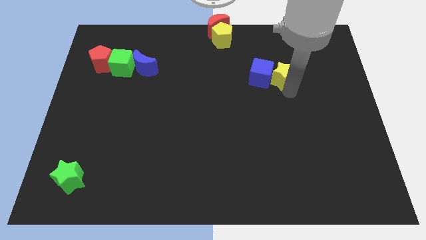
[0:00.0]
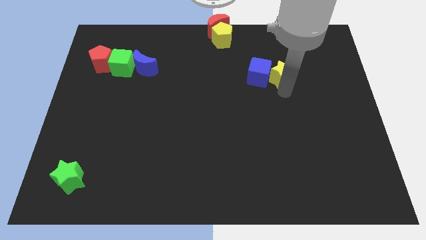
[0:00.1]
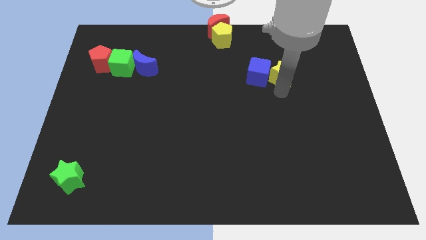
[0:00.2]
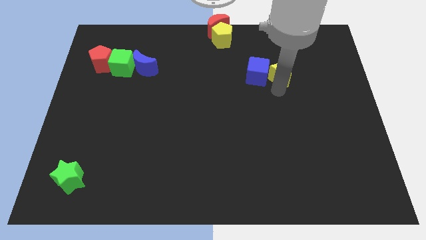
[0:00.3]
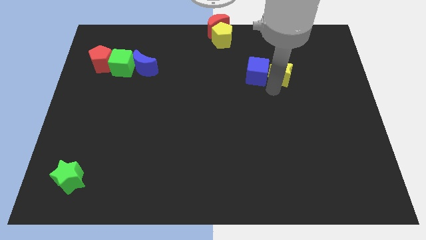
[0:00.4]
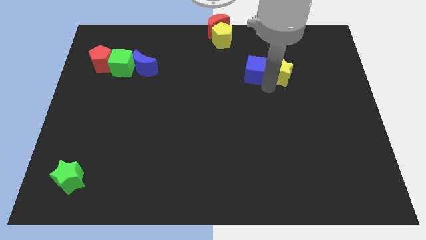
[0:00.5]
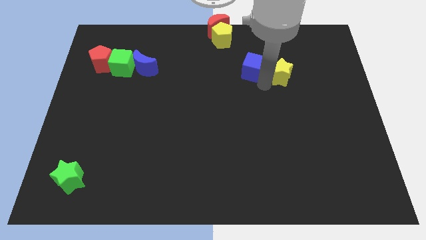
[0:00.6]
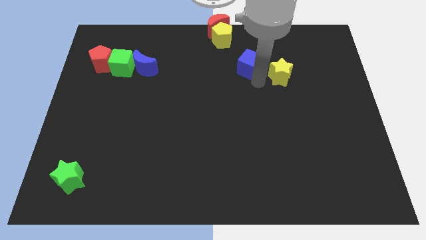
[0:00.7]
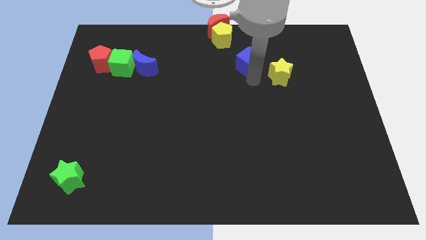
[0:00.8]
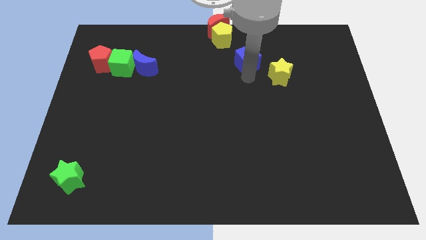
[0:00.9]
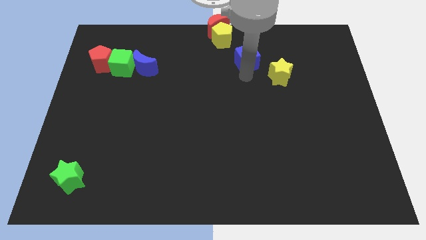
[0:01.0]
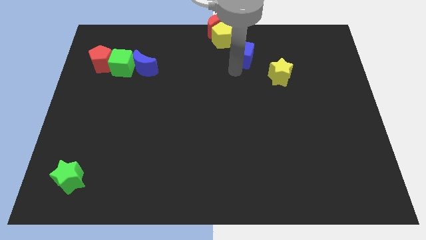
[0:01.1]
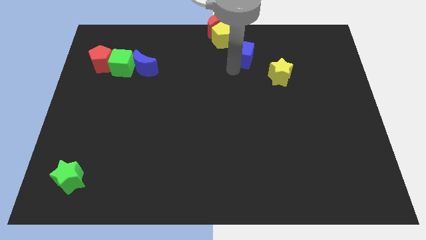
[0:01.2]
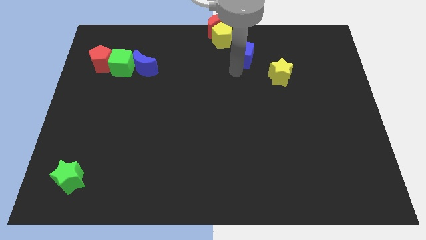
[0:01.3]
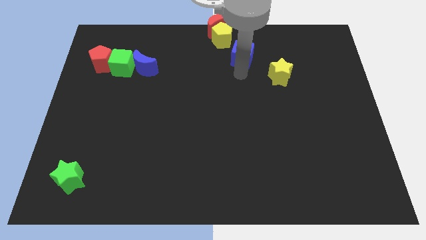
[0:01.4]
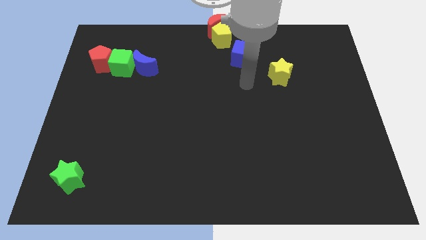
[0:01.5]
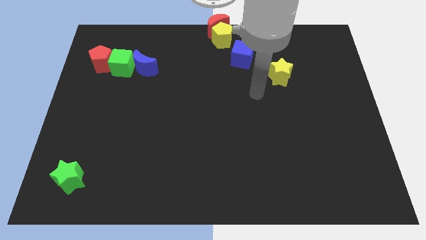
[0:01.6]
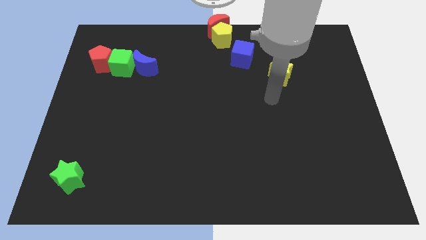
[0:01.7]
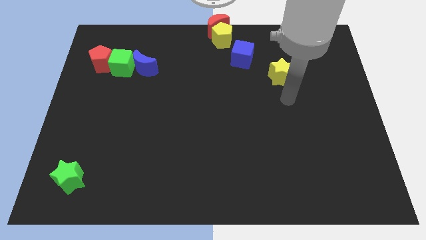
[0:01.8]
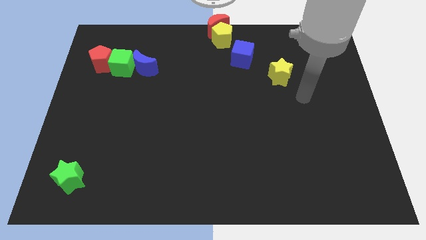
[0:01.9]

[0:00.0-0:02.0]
move blue cube right below the yellow pentagon

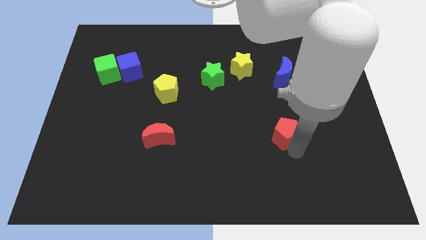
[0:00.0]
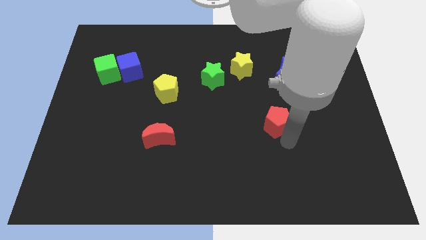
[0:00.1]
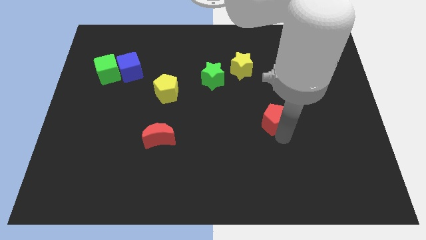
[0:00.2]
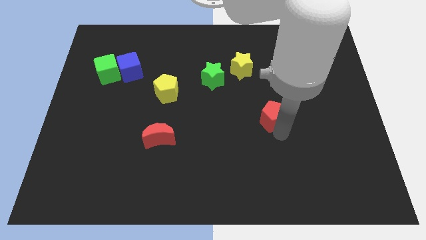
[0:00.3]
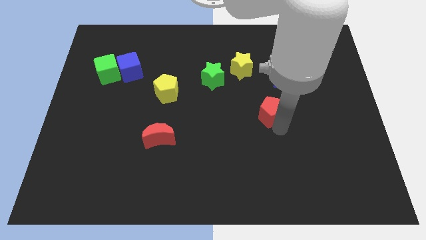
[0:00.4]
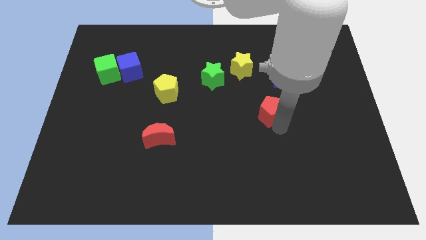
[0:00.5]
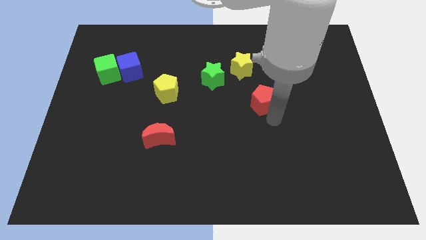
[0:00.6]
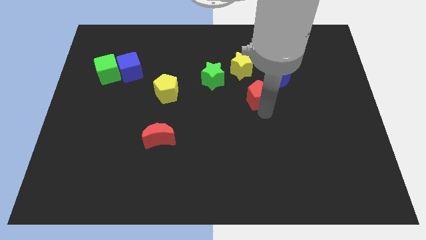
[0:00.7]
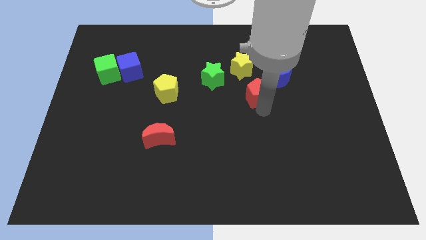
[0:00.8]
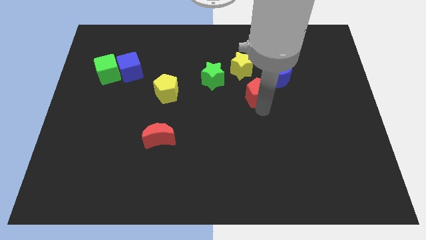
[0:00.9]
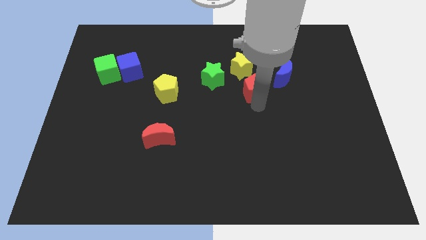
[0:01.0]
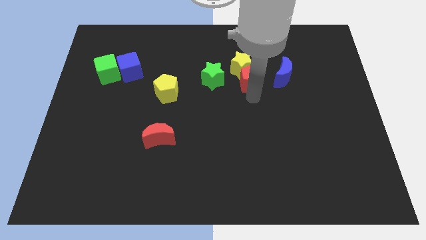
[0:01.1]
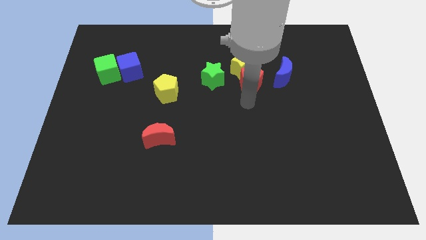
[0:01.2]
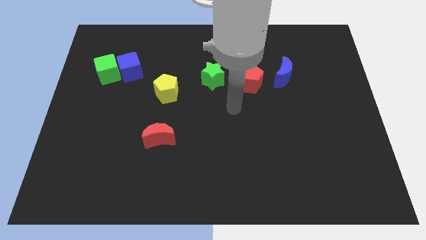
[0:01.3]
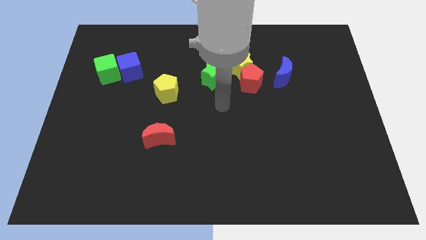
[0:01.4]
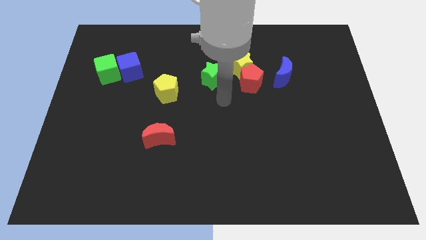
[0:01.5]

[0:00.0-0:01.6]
push the red pentagon into the yellow star

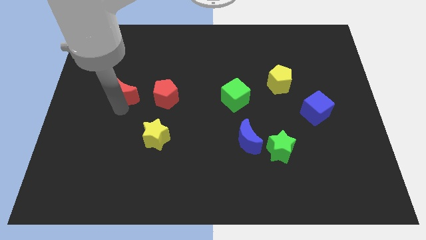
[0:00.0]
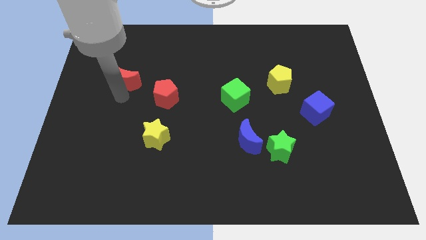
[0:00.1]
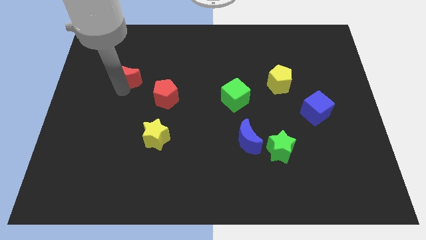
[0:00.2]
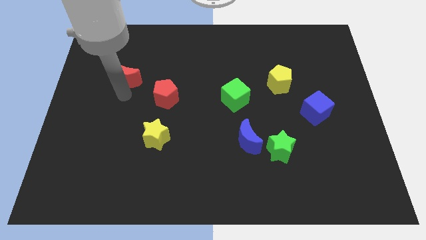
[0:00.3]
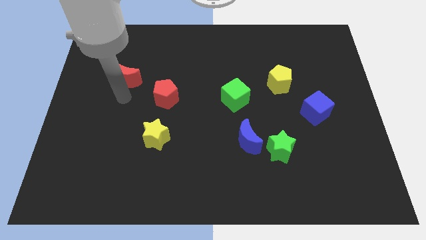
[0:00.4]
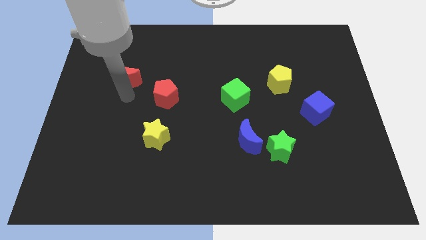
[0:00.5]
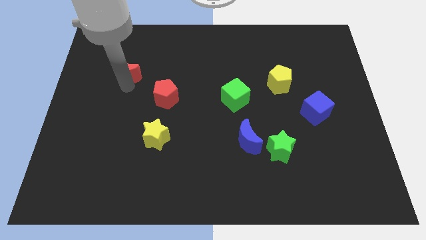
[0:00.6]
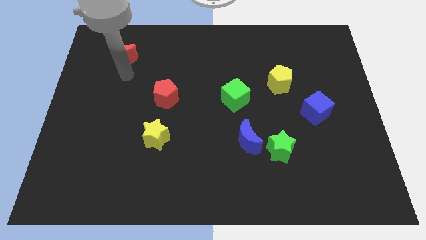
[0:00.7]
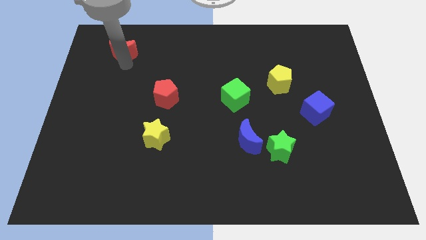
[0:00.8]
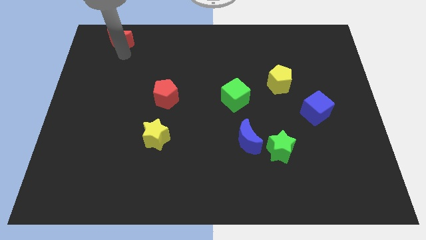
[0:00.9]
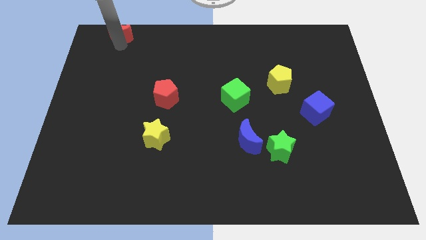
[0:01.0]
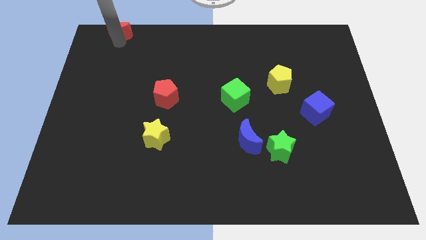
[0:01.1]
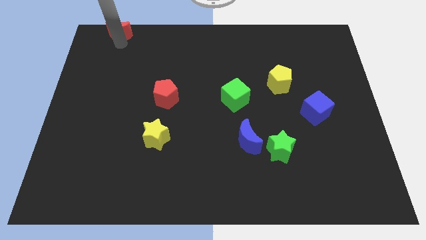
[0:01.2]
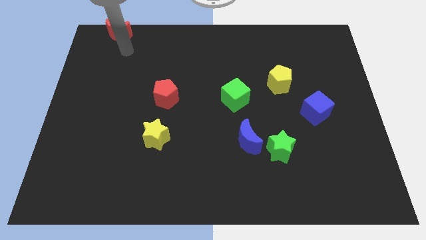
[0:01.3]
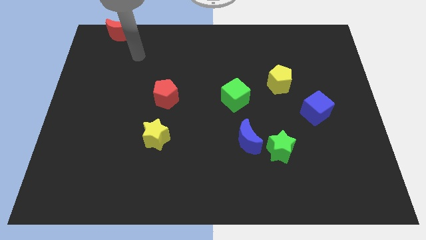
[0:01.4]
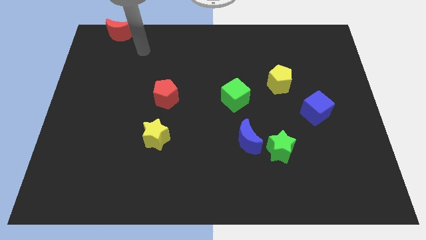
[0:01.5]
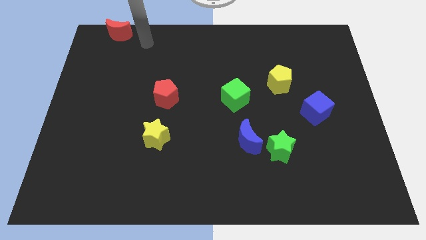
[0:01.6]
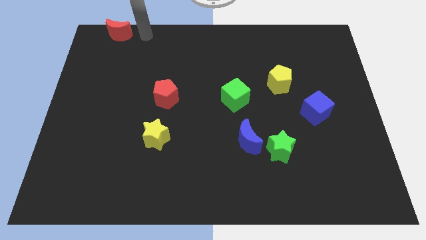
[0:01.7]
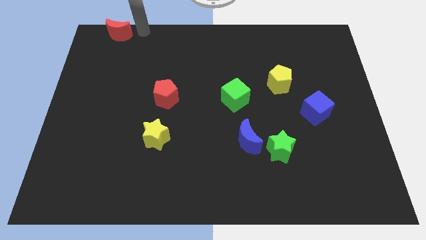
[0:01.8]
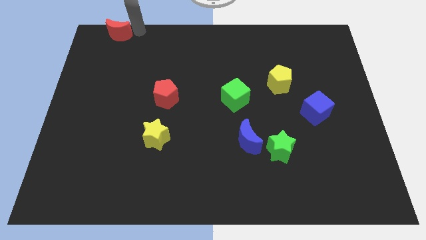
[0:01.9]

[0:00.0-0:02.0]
push the red crescent to the top

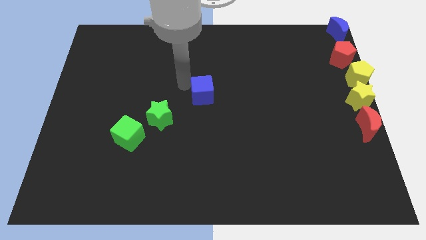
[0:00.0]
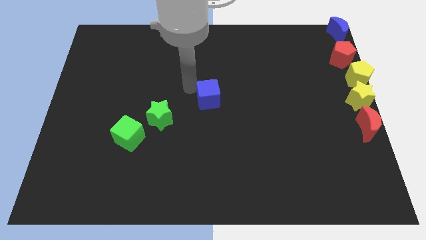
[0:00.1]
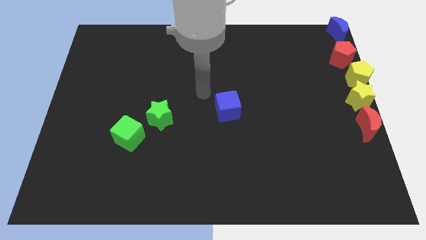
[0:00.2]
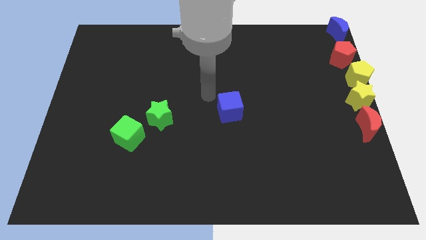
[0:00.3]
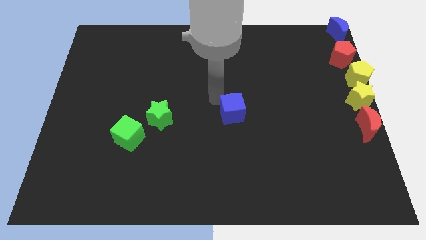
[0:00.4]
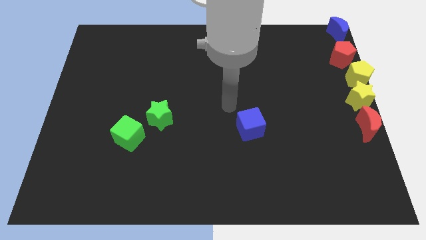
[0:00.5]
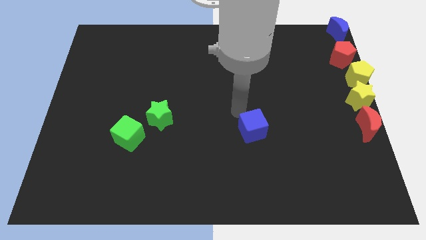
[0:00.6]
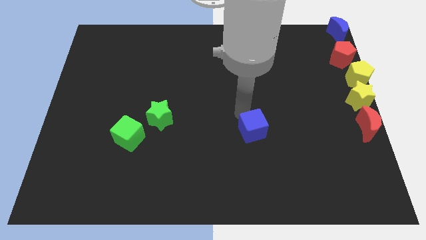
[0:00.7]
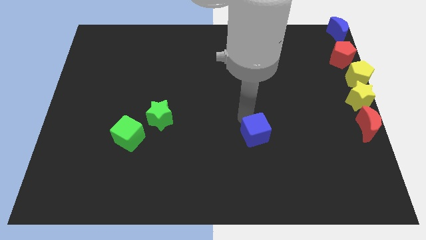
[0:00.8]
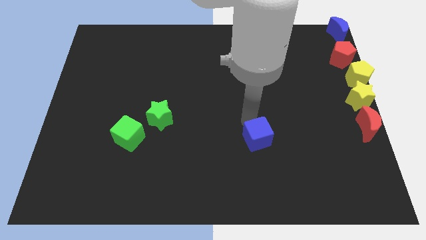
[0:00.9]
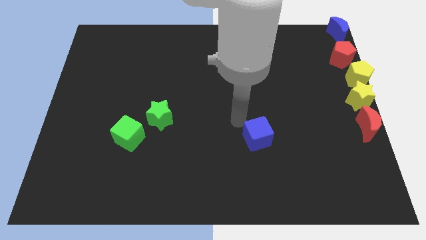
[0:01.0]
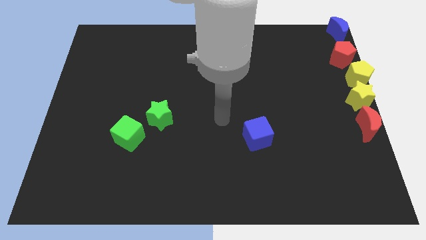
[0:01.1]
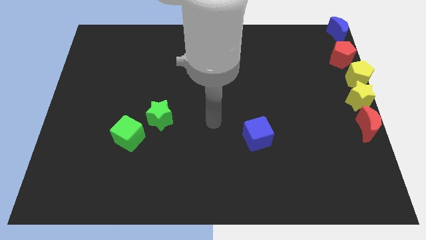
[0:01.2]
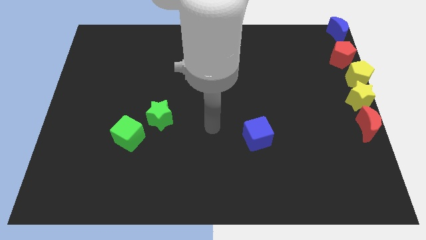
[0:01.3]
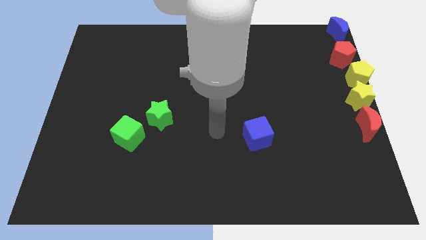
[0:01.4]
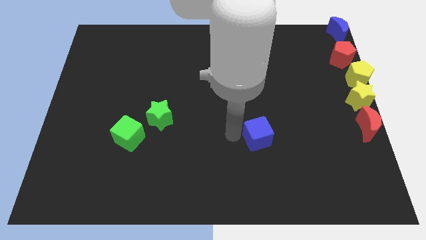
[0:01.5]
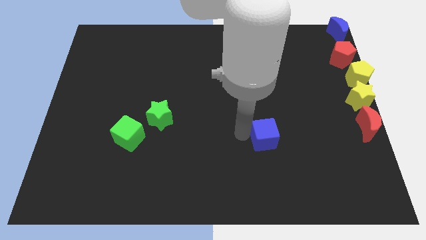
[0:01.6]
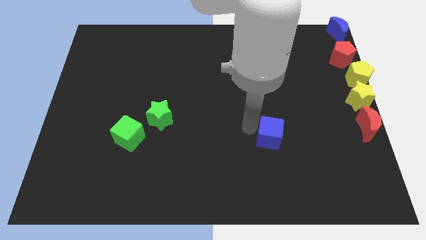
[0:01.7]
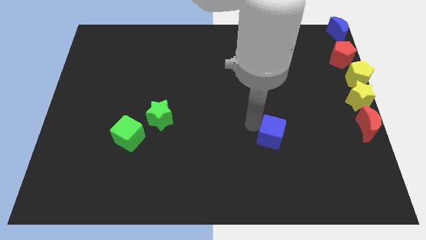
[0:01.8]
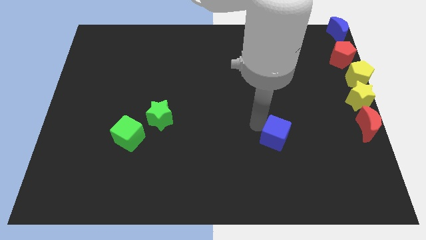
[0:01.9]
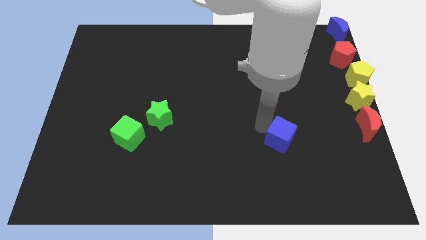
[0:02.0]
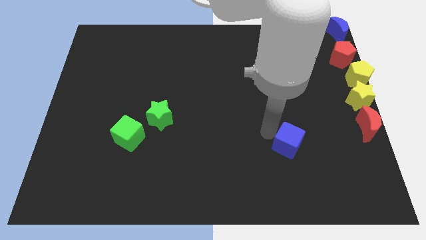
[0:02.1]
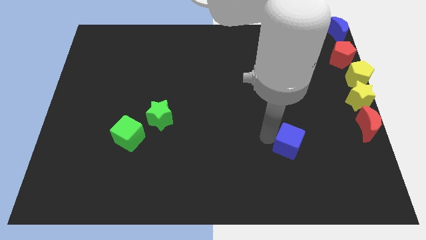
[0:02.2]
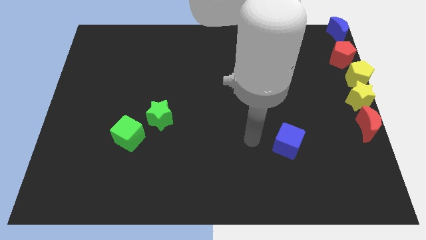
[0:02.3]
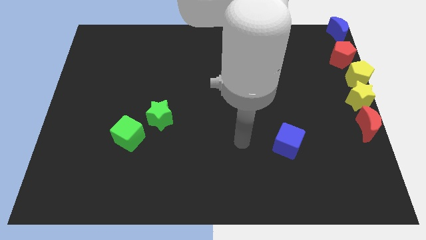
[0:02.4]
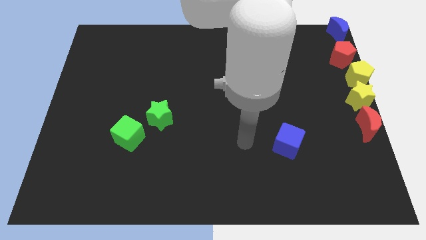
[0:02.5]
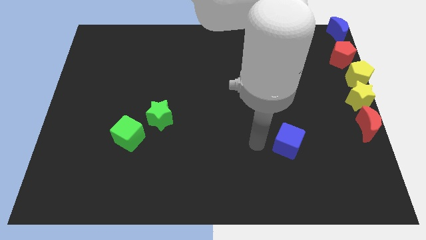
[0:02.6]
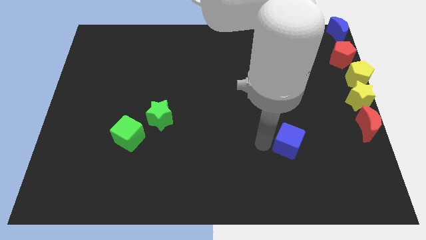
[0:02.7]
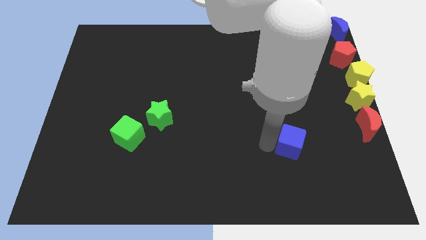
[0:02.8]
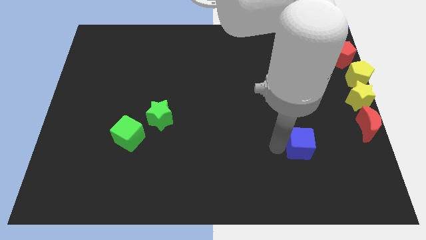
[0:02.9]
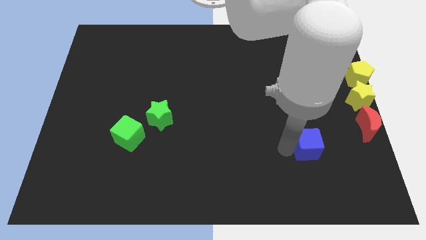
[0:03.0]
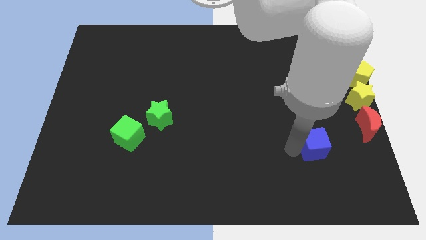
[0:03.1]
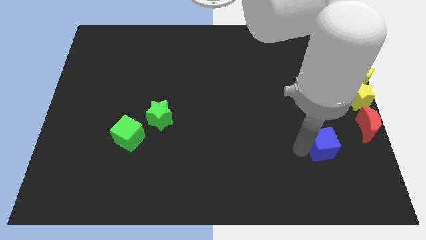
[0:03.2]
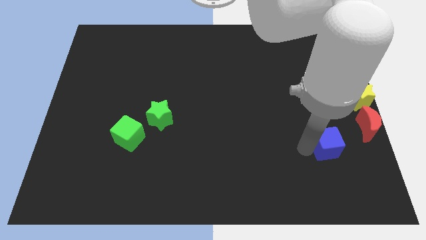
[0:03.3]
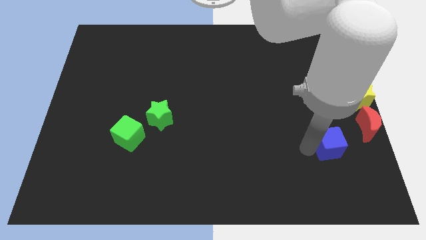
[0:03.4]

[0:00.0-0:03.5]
drag the blue cube diagonally bottom left to red crescent
